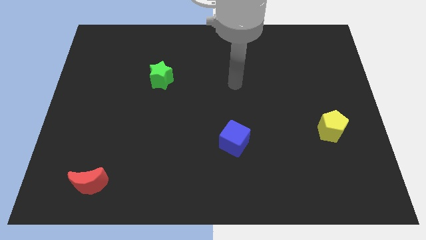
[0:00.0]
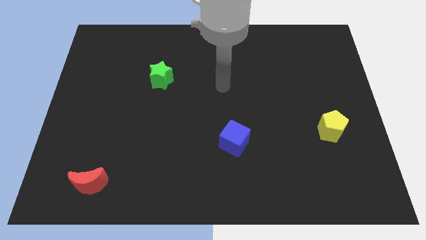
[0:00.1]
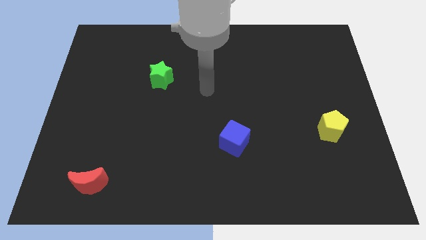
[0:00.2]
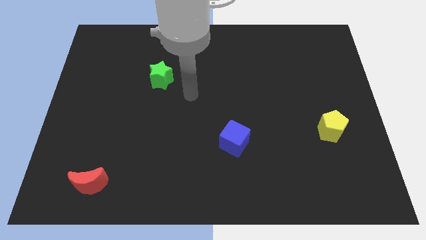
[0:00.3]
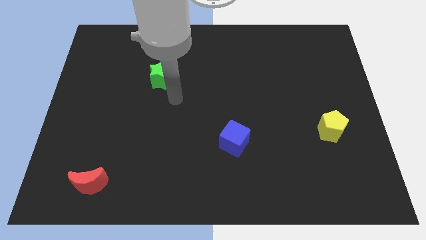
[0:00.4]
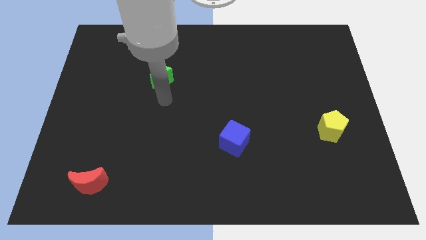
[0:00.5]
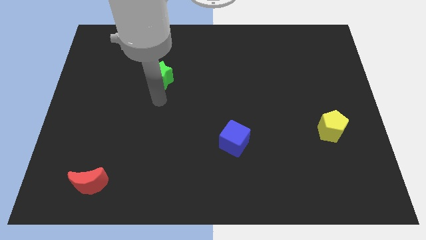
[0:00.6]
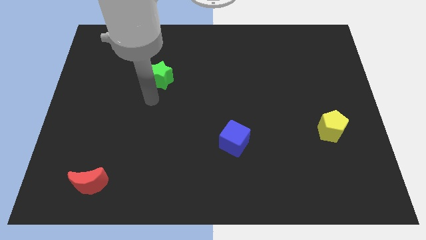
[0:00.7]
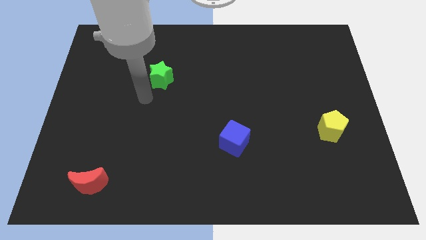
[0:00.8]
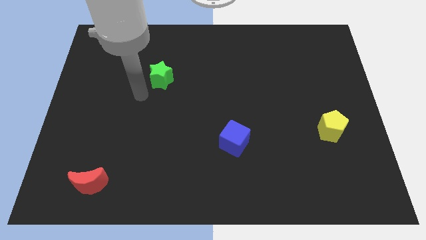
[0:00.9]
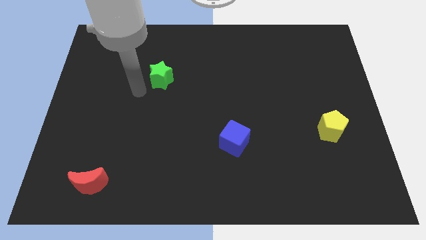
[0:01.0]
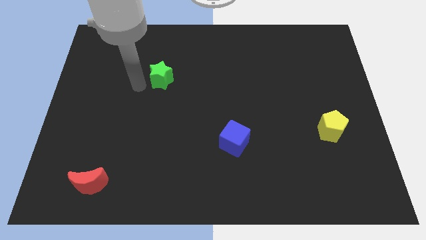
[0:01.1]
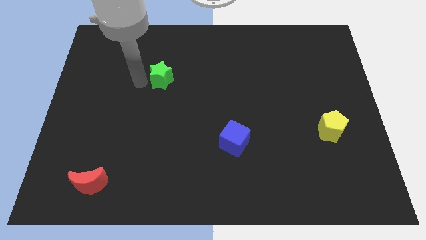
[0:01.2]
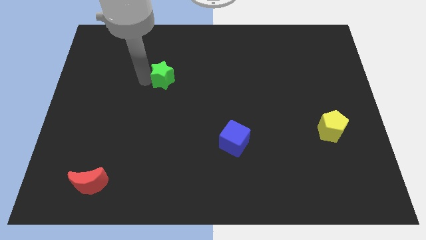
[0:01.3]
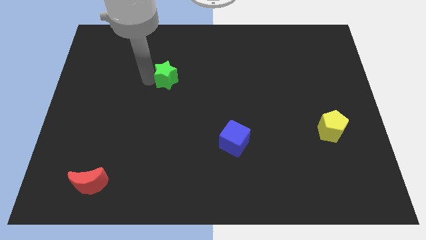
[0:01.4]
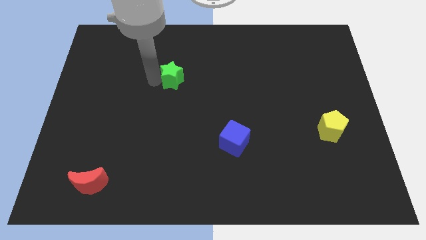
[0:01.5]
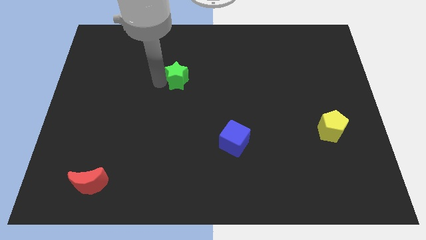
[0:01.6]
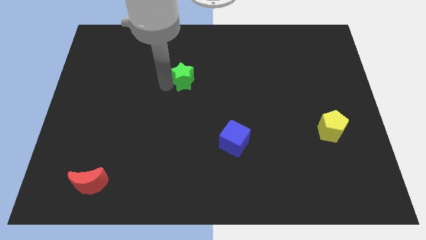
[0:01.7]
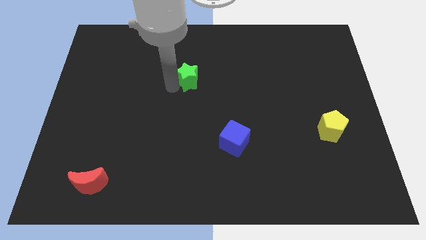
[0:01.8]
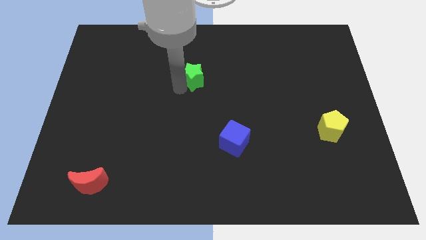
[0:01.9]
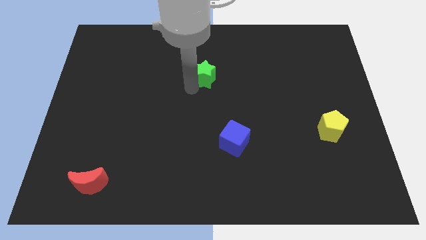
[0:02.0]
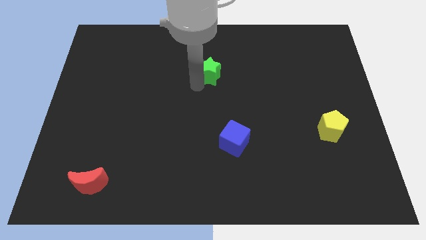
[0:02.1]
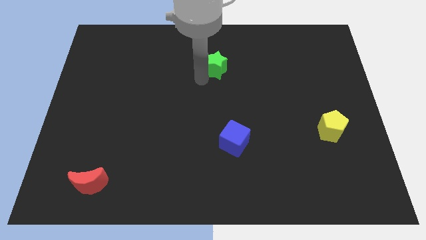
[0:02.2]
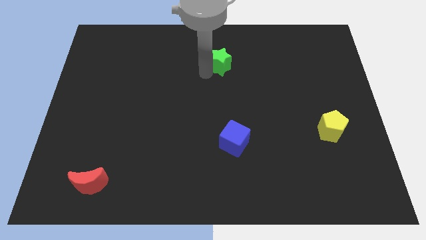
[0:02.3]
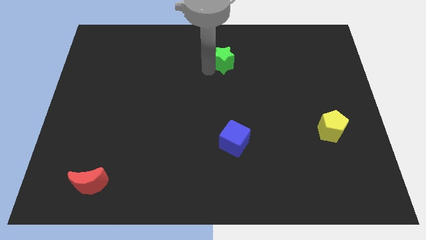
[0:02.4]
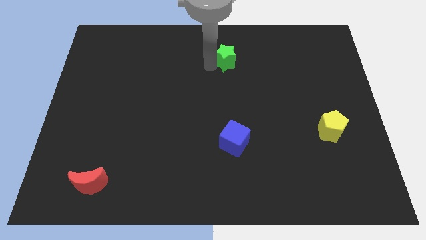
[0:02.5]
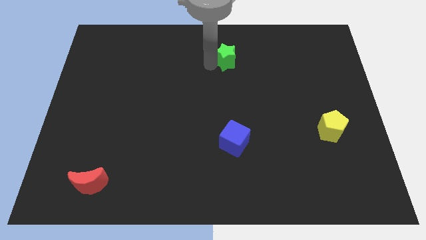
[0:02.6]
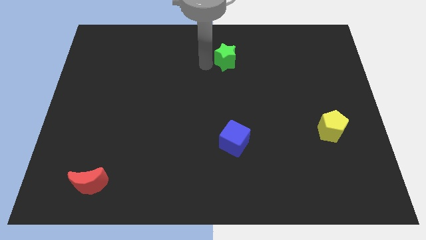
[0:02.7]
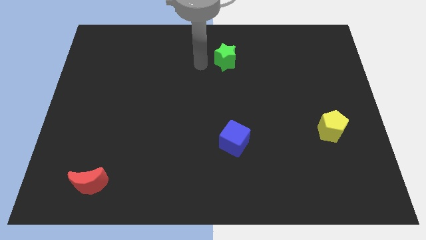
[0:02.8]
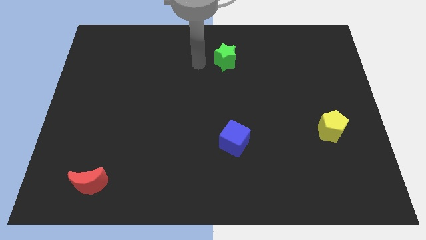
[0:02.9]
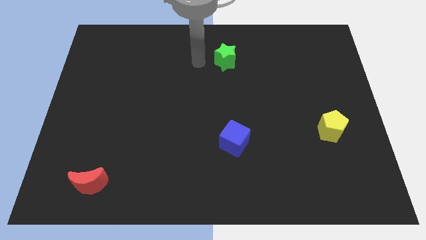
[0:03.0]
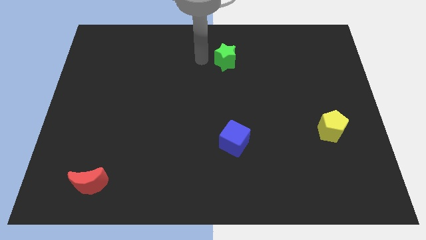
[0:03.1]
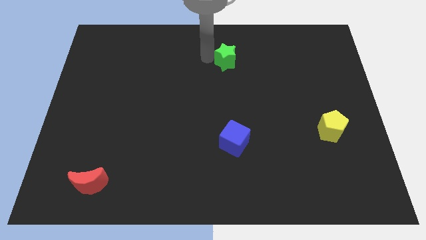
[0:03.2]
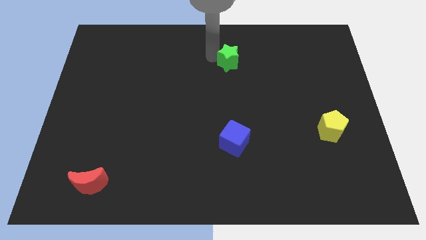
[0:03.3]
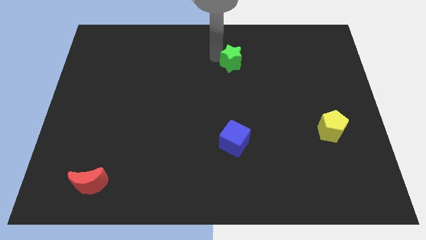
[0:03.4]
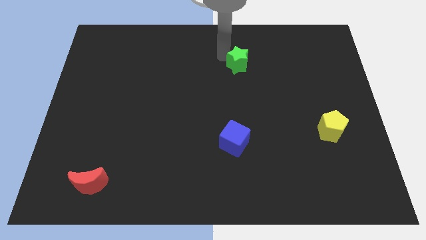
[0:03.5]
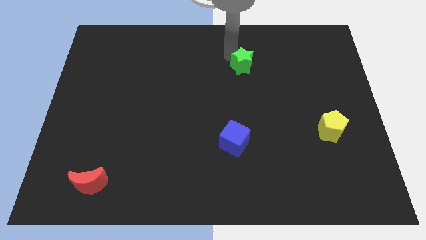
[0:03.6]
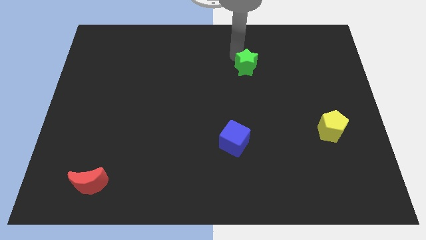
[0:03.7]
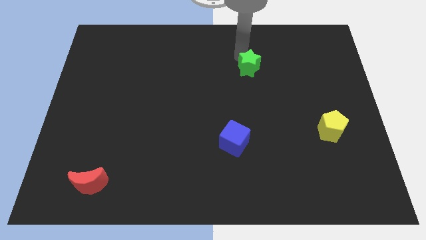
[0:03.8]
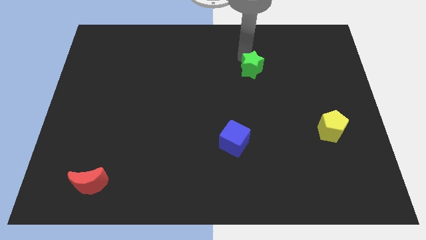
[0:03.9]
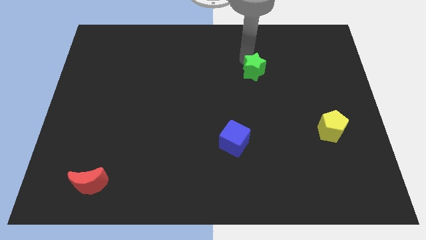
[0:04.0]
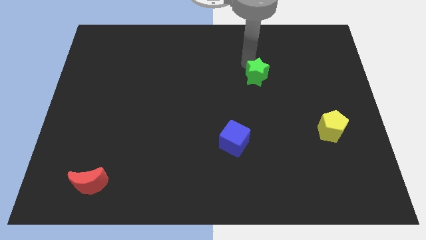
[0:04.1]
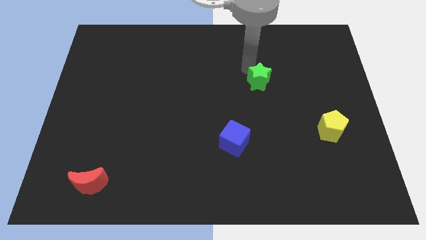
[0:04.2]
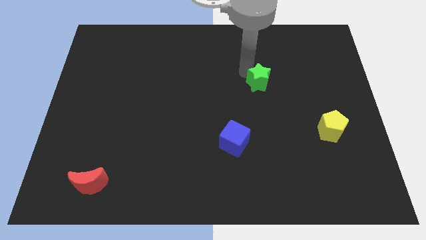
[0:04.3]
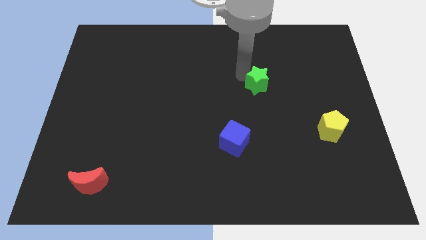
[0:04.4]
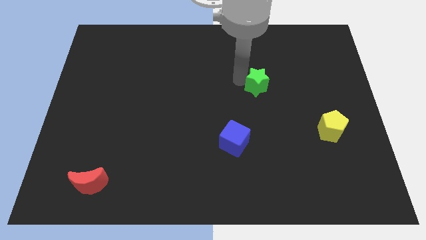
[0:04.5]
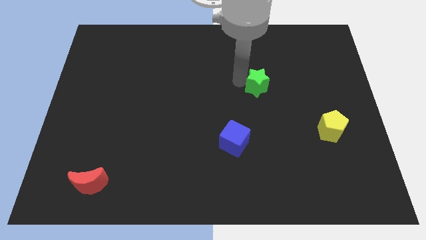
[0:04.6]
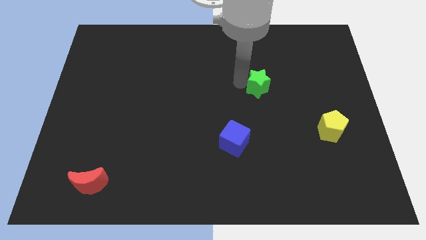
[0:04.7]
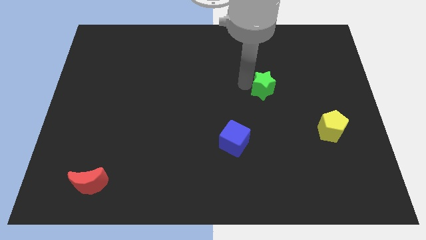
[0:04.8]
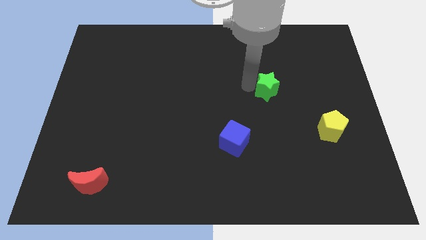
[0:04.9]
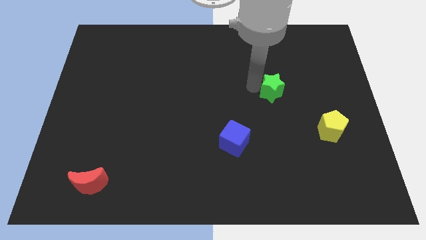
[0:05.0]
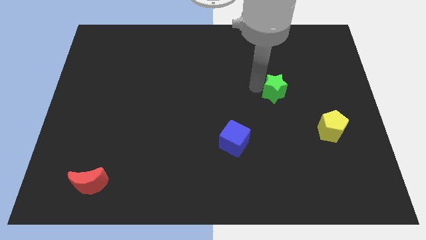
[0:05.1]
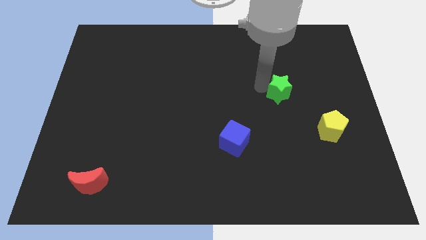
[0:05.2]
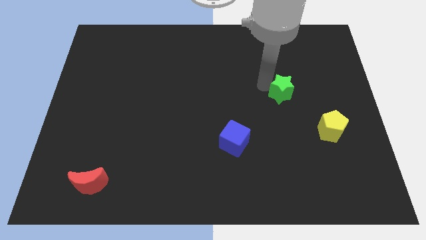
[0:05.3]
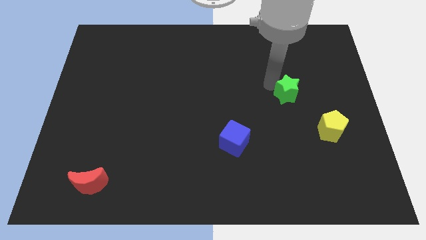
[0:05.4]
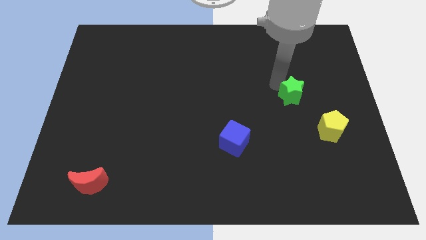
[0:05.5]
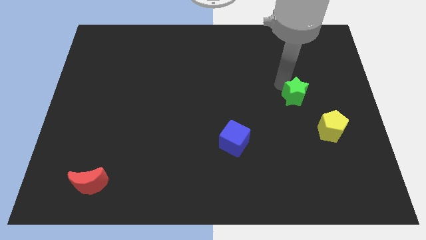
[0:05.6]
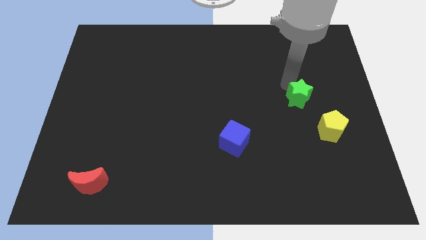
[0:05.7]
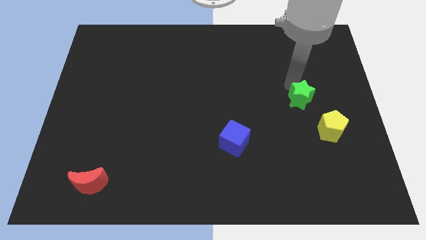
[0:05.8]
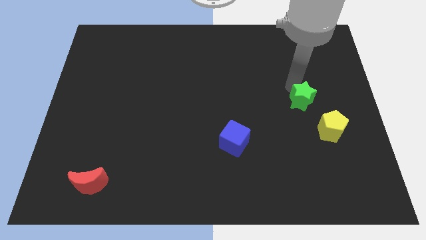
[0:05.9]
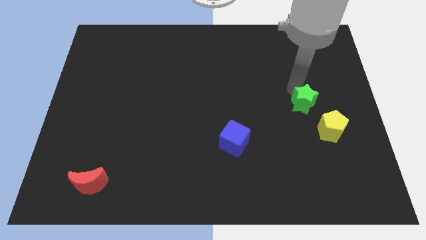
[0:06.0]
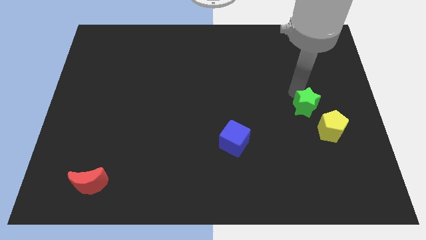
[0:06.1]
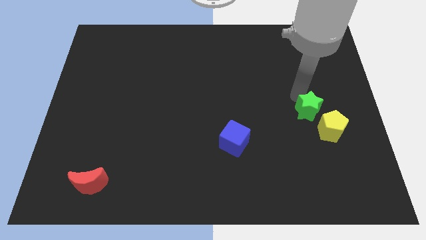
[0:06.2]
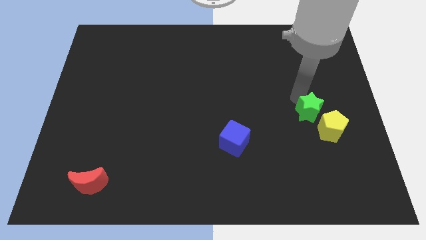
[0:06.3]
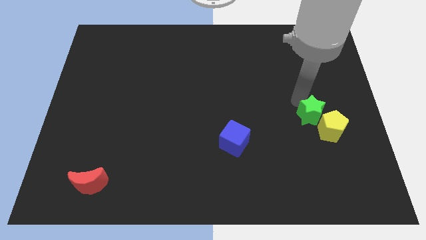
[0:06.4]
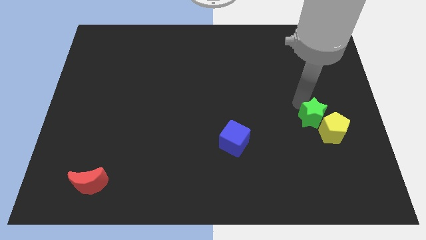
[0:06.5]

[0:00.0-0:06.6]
put the green block close to the yellow block

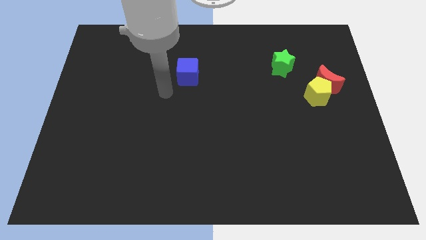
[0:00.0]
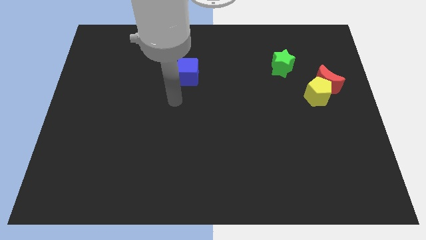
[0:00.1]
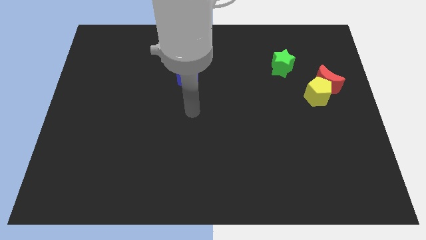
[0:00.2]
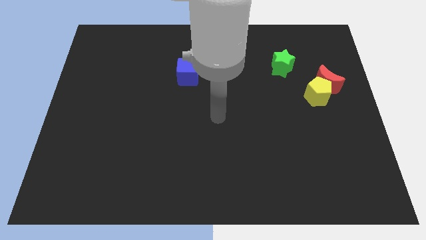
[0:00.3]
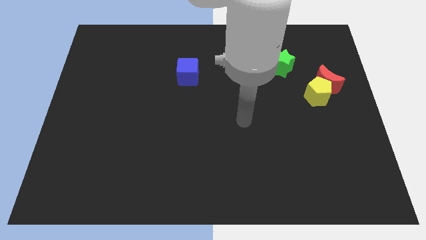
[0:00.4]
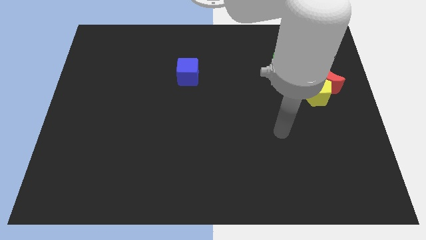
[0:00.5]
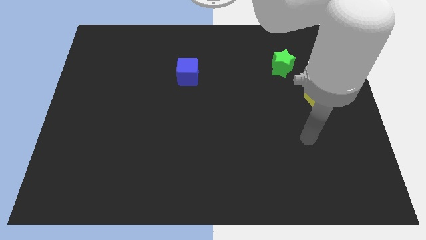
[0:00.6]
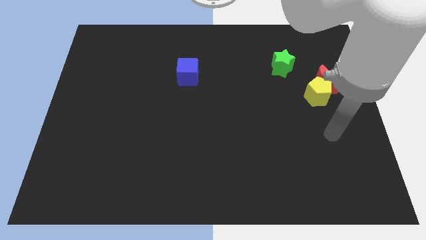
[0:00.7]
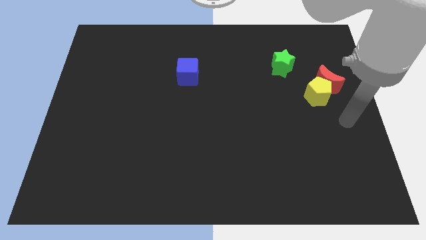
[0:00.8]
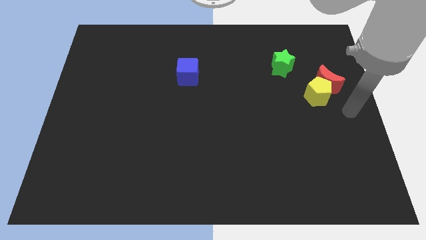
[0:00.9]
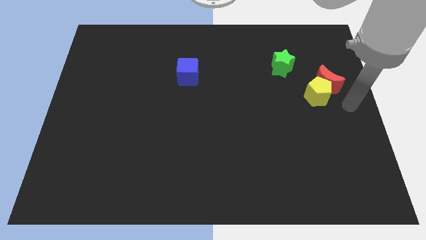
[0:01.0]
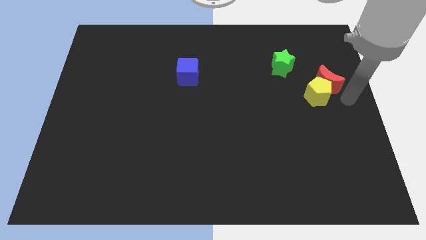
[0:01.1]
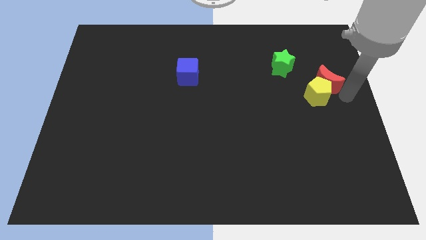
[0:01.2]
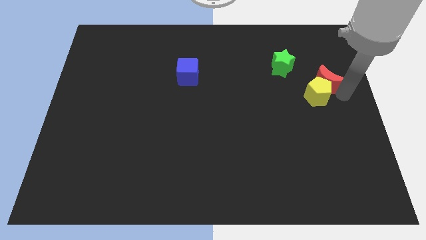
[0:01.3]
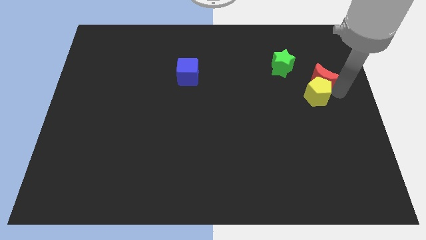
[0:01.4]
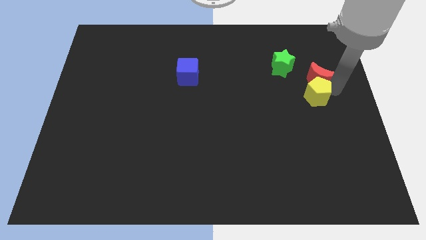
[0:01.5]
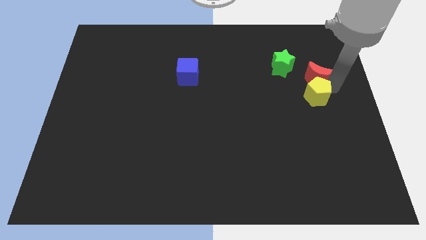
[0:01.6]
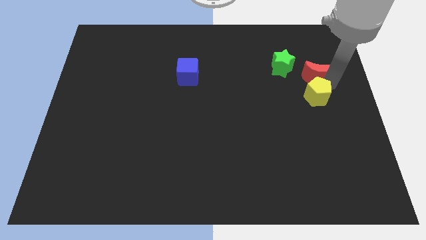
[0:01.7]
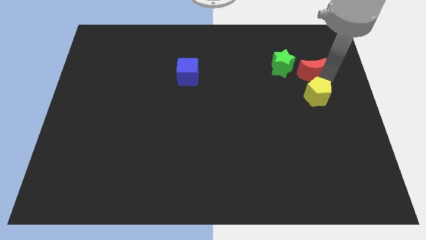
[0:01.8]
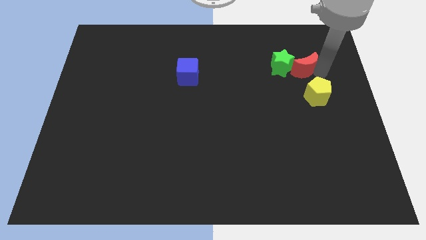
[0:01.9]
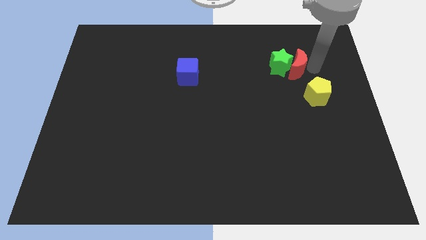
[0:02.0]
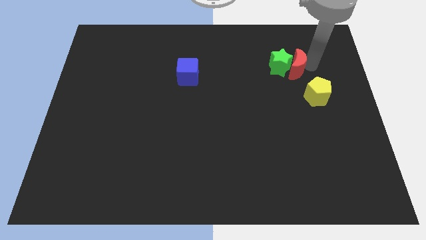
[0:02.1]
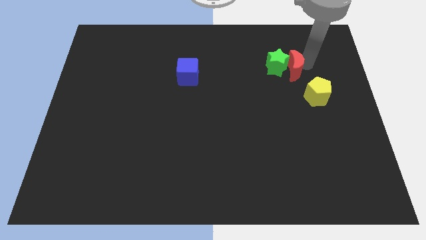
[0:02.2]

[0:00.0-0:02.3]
move the moon close to the star
